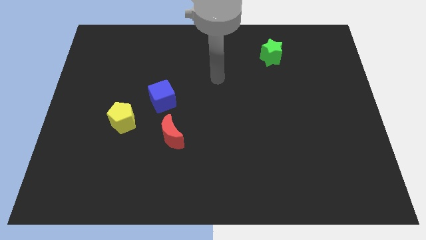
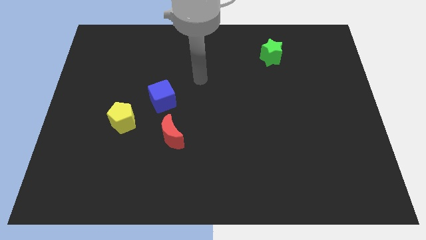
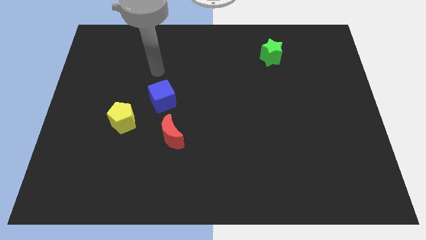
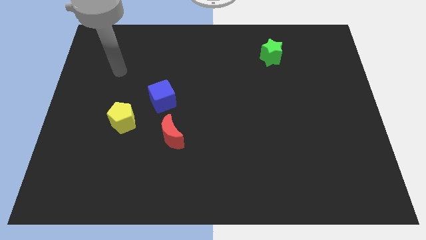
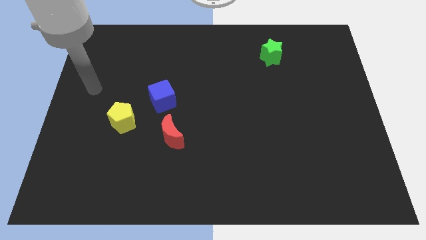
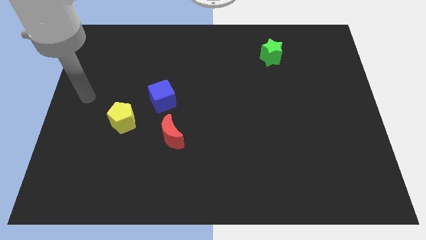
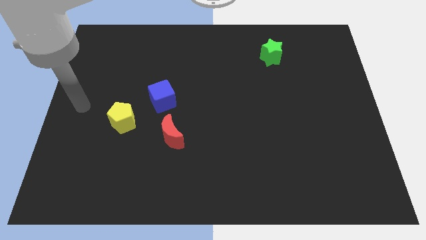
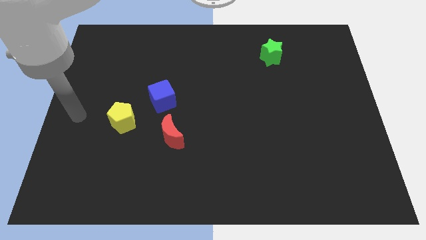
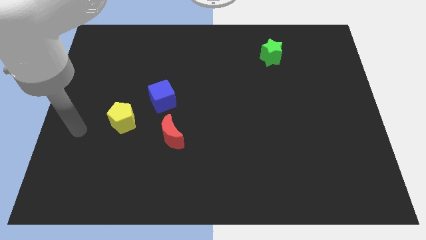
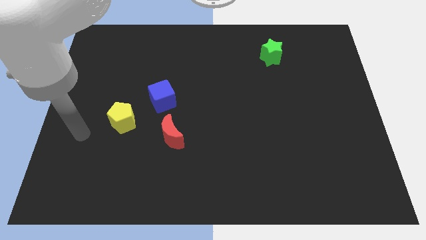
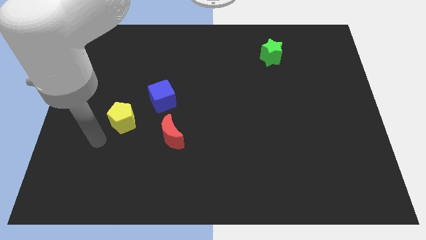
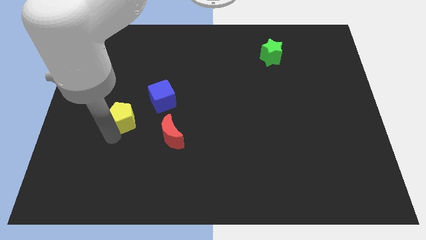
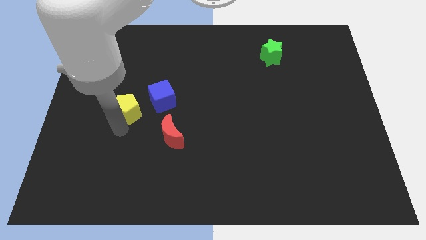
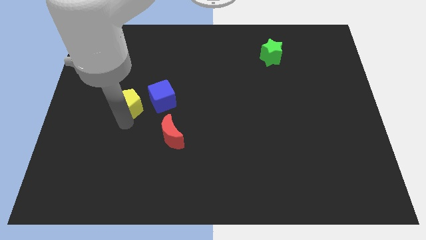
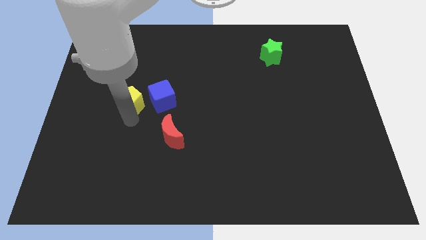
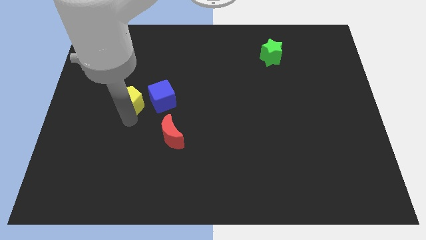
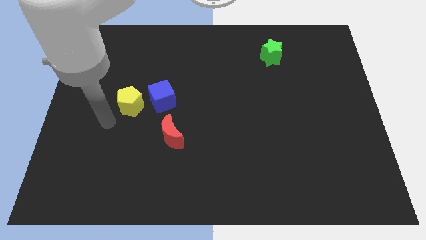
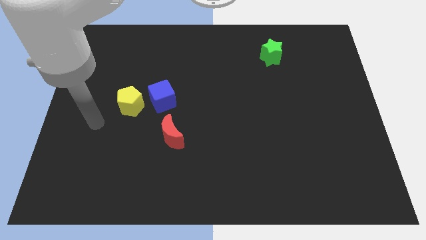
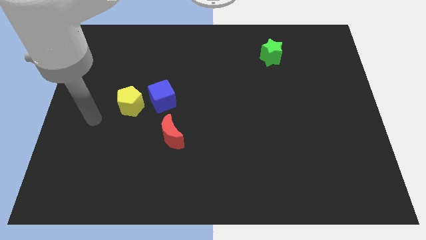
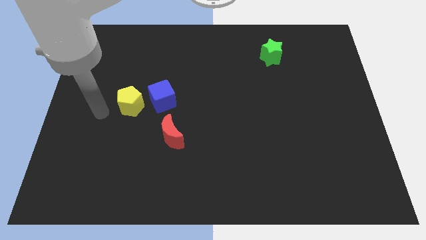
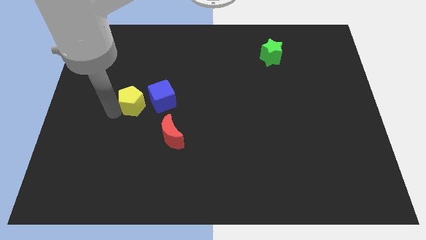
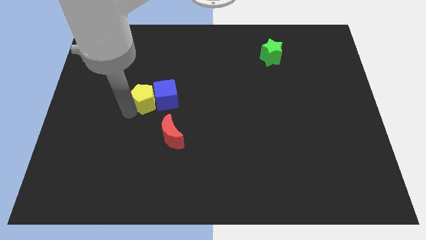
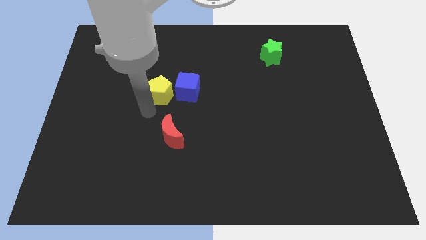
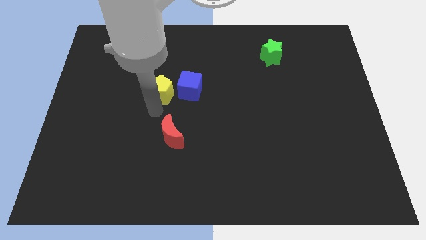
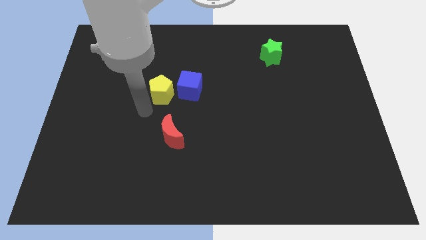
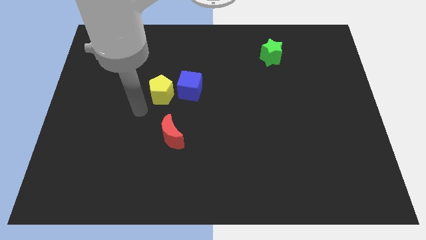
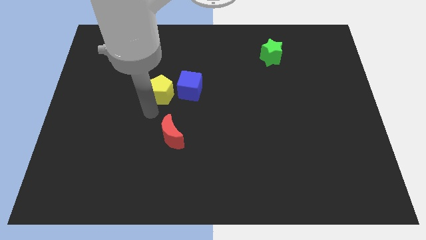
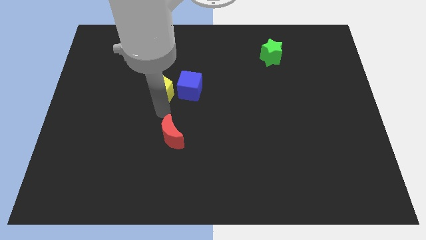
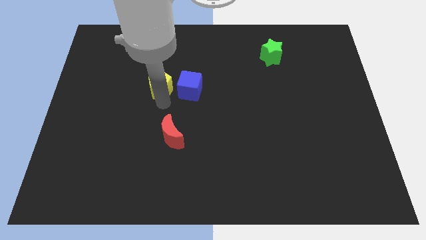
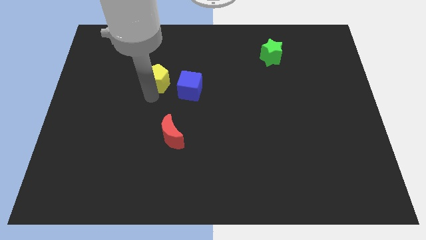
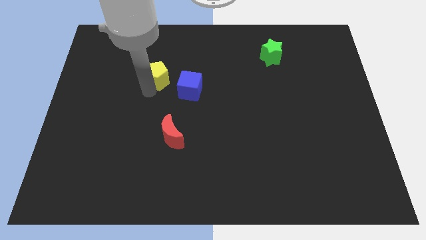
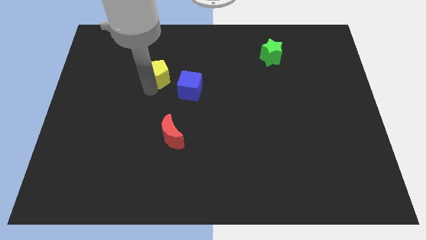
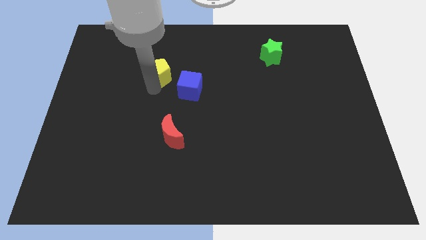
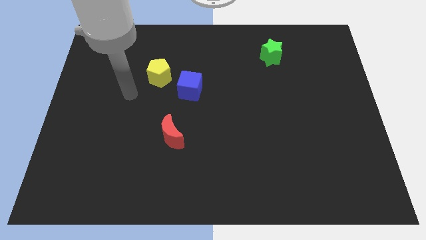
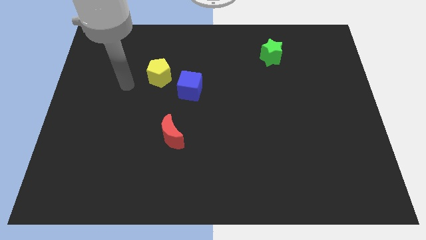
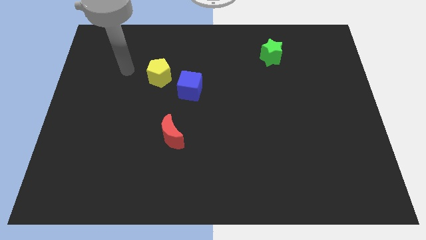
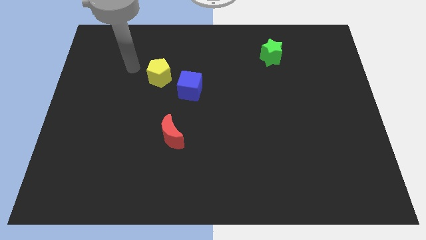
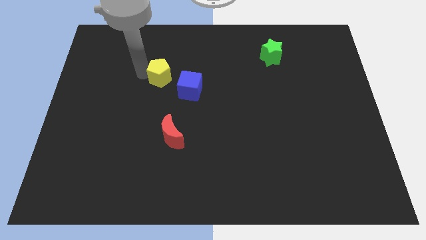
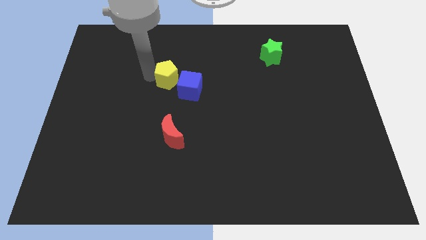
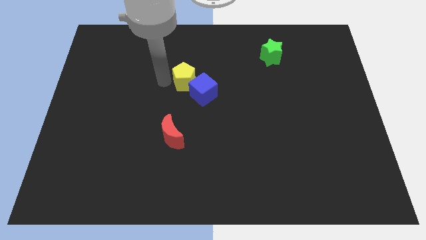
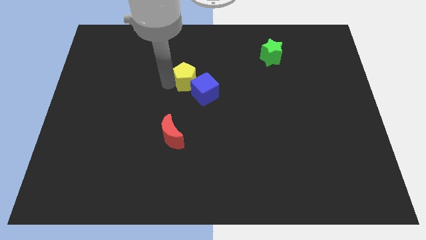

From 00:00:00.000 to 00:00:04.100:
put the yellow pentagon towards the blue cube

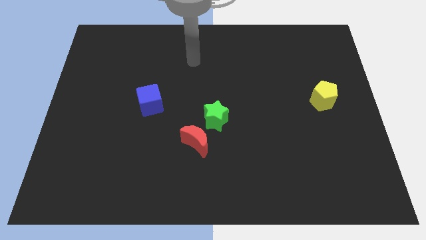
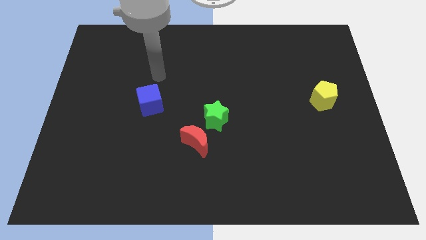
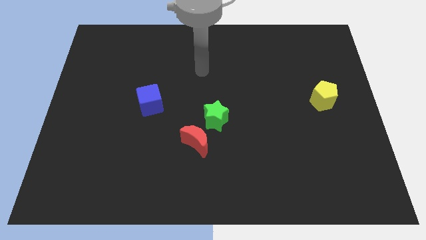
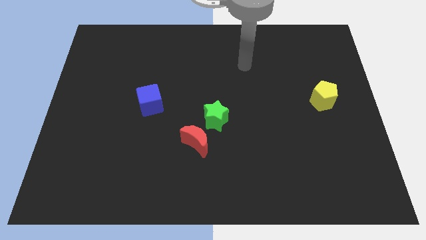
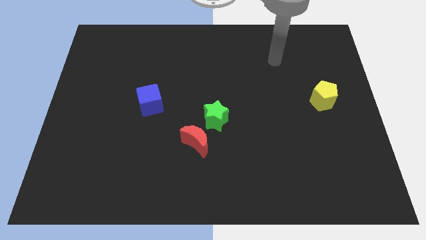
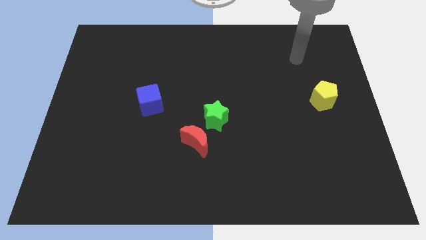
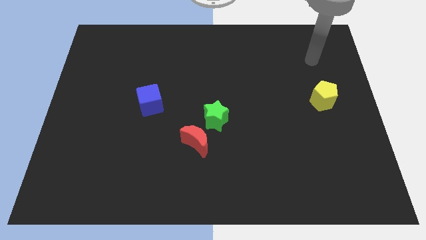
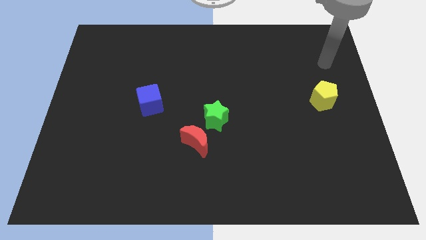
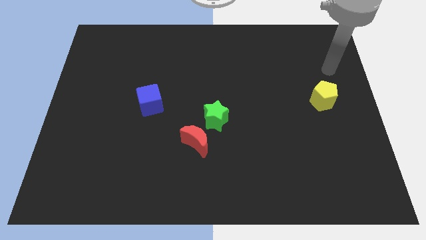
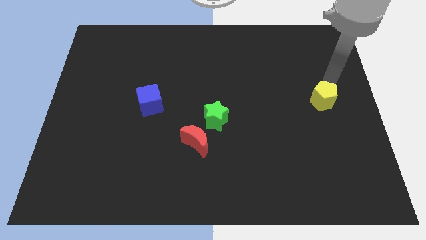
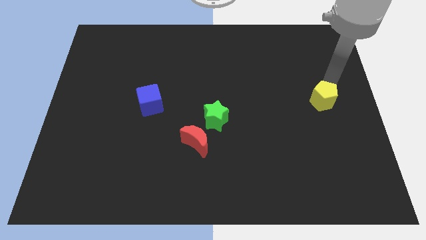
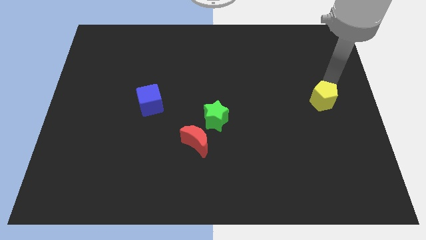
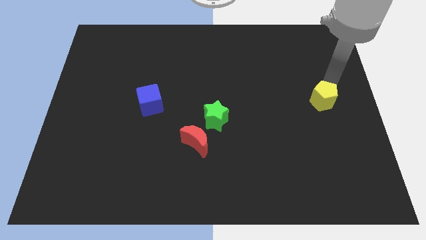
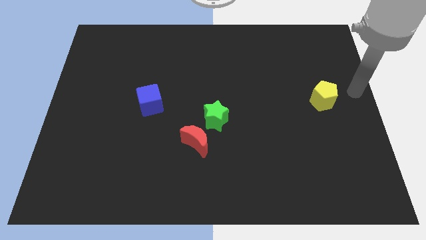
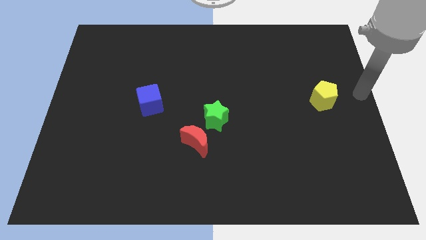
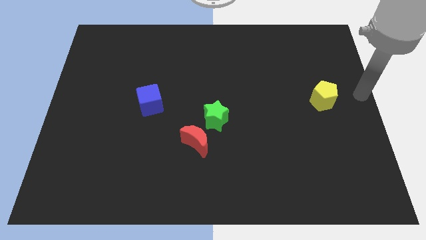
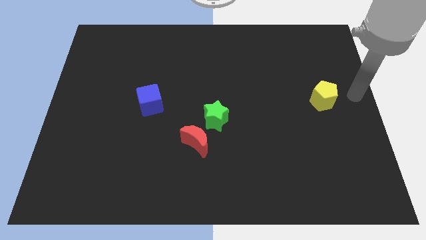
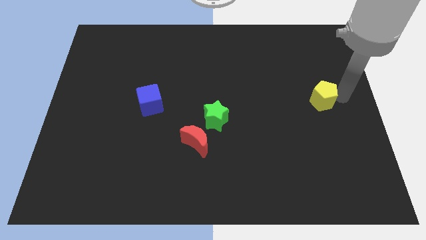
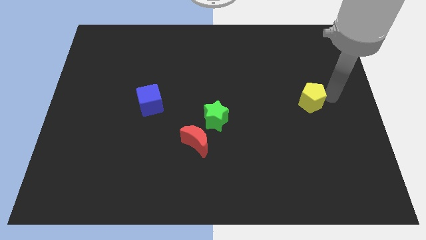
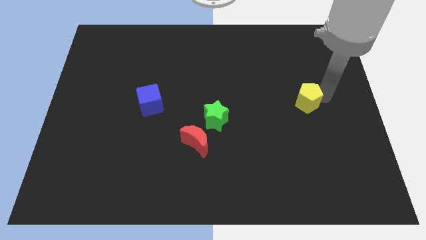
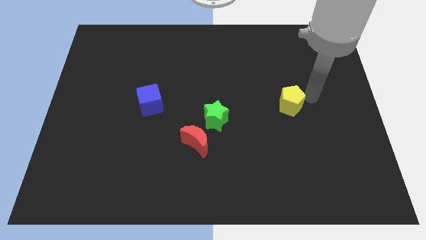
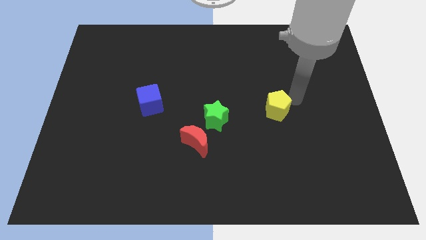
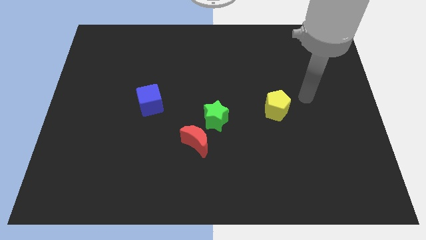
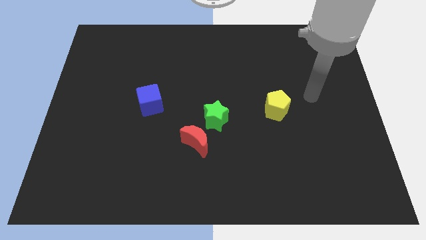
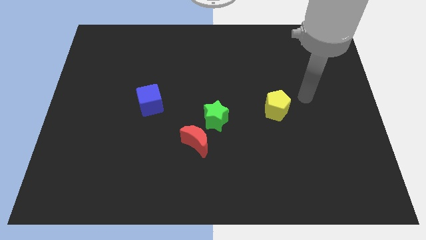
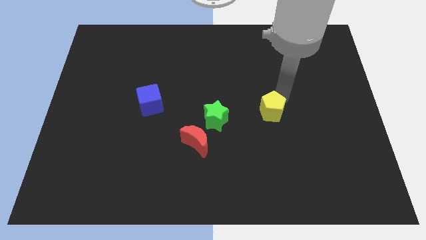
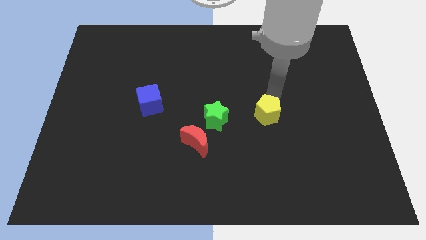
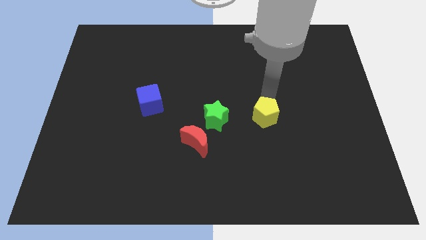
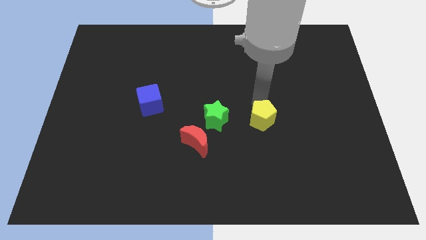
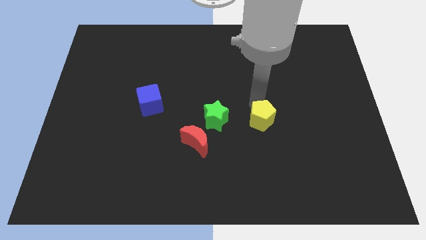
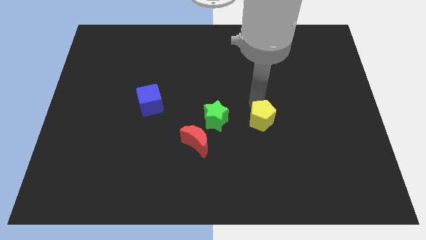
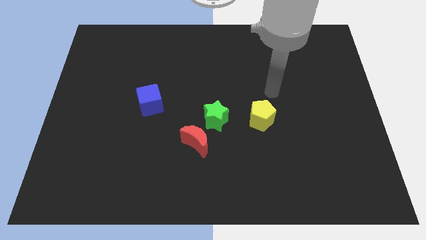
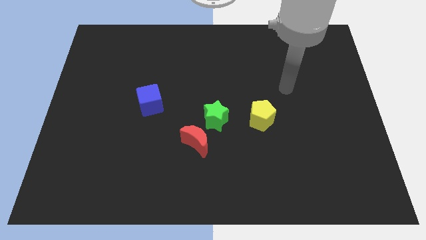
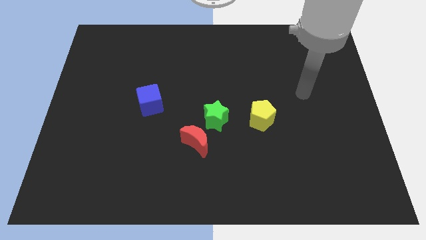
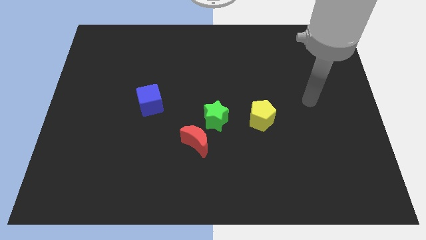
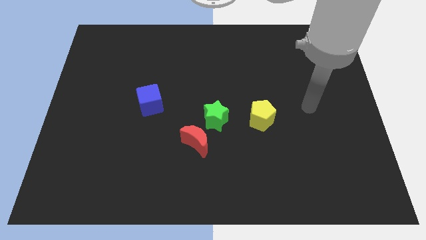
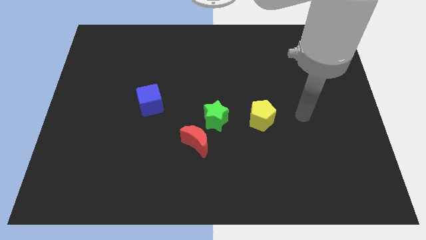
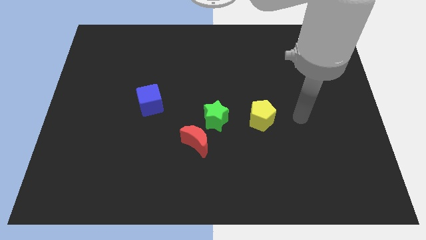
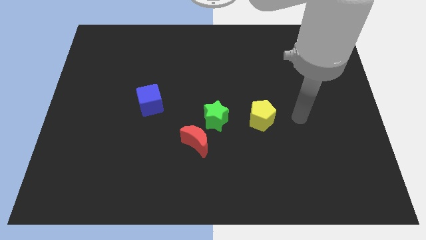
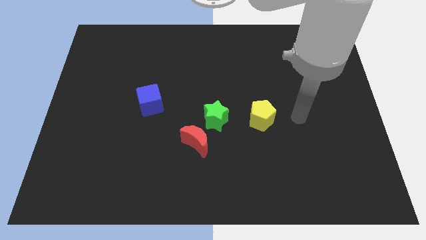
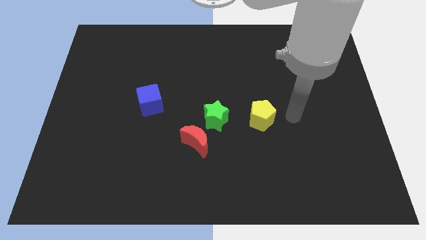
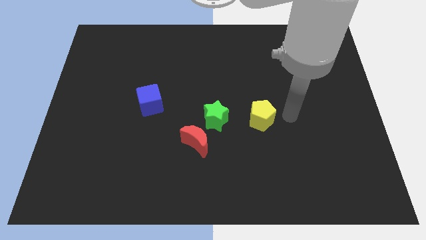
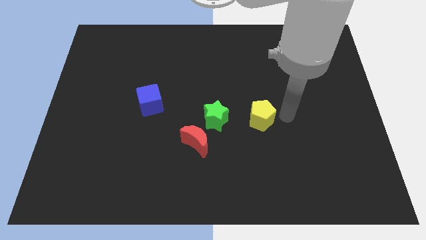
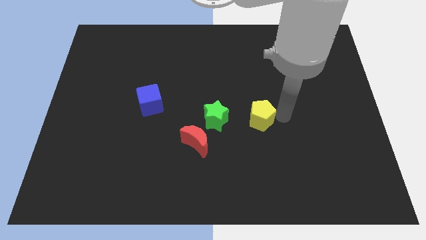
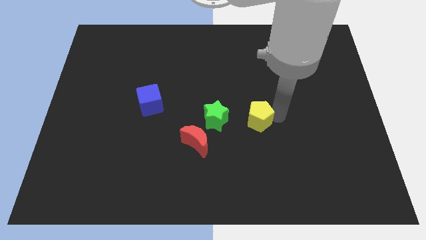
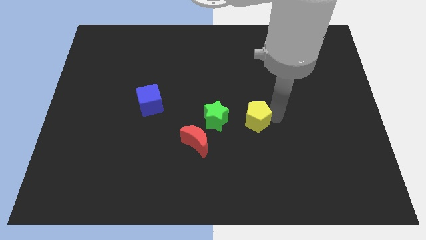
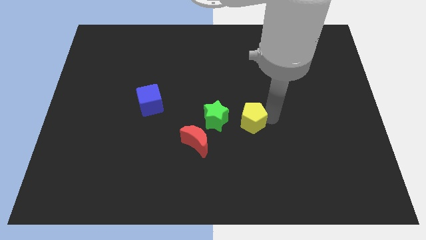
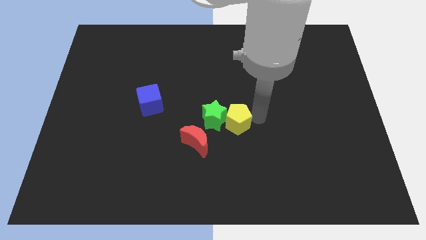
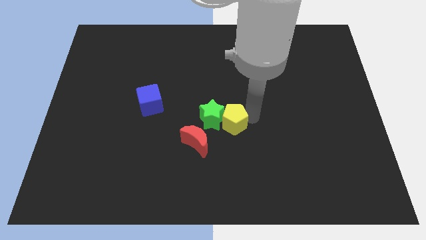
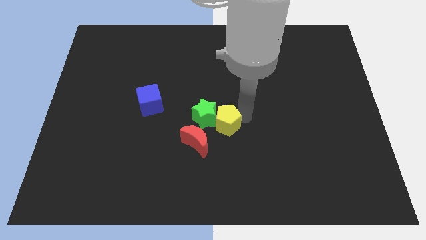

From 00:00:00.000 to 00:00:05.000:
slide the yellow pentagon next to the green star
